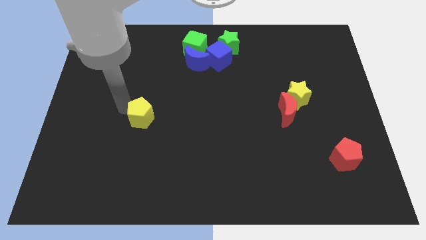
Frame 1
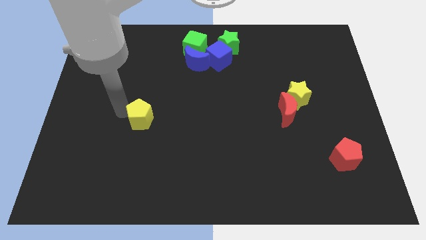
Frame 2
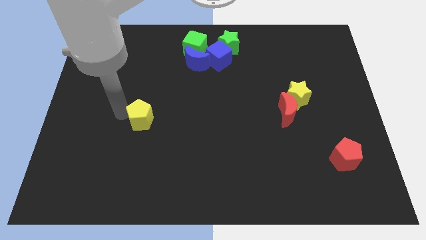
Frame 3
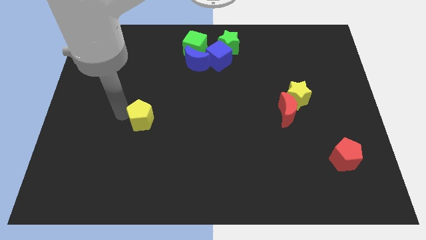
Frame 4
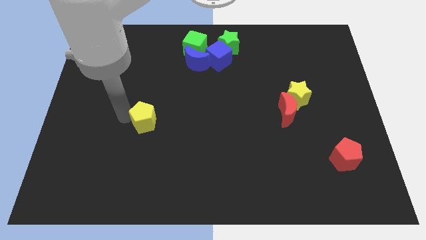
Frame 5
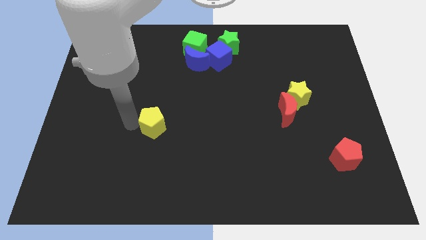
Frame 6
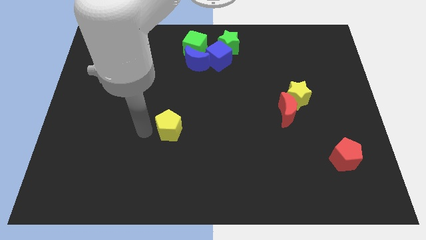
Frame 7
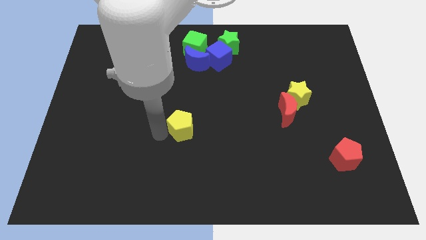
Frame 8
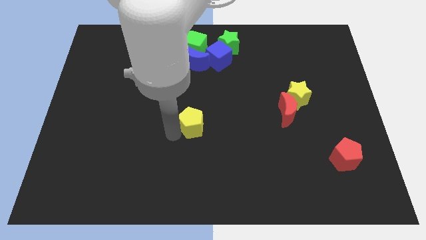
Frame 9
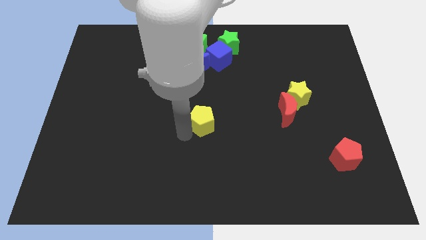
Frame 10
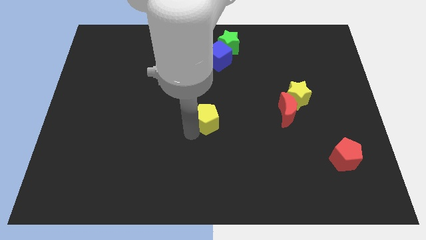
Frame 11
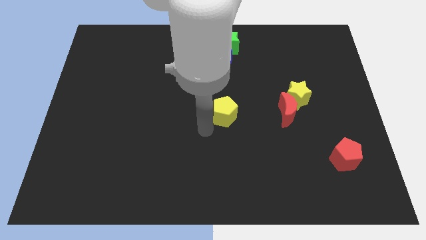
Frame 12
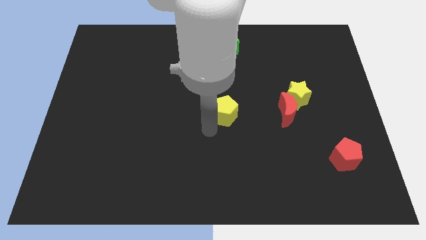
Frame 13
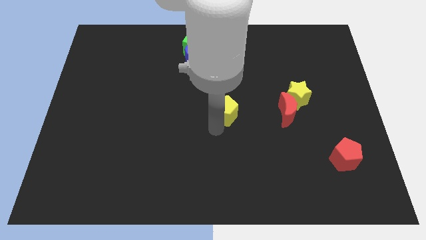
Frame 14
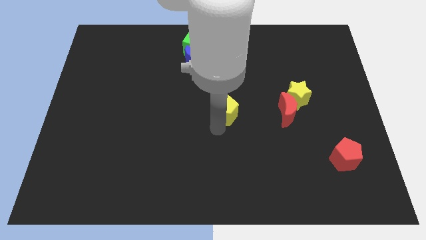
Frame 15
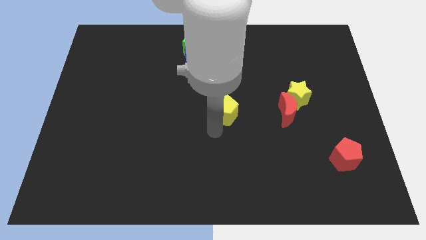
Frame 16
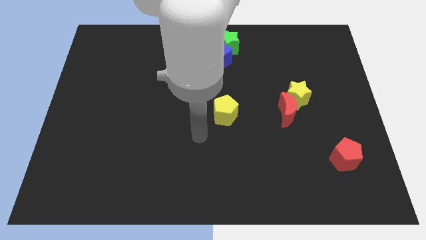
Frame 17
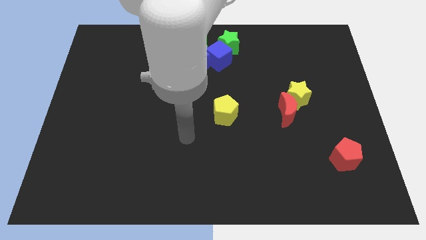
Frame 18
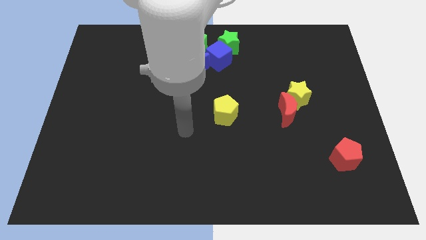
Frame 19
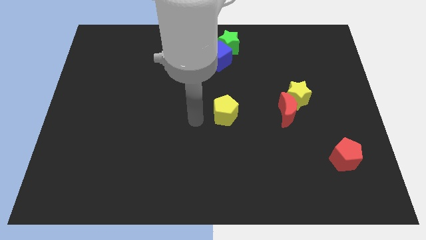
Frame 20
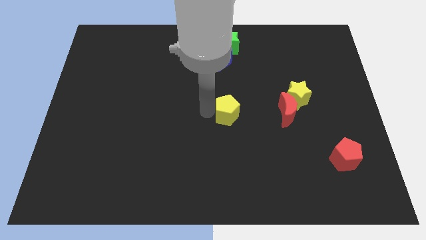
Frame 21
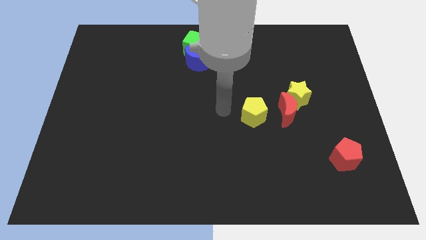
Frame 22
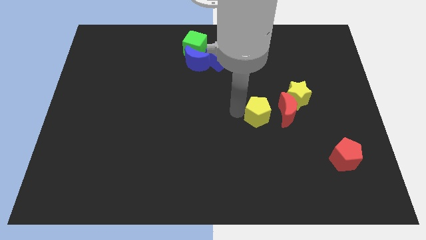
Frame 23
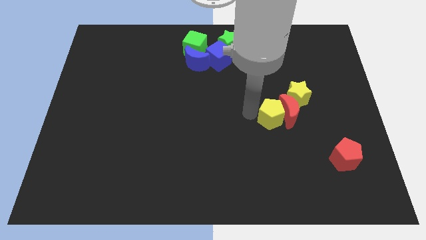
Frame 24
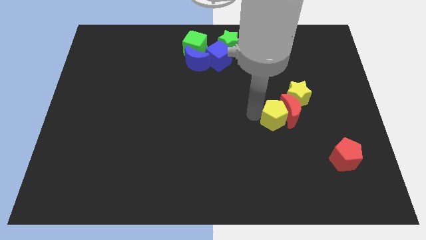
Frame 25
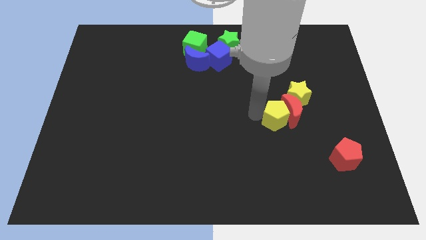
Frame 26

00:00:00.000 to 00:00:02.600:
push the yellow pentagon into the red moon

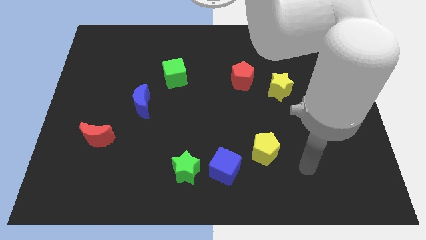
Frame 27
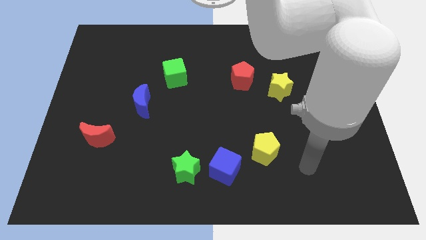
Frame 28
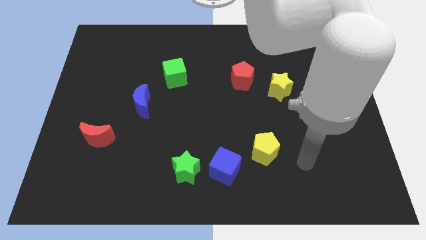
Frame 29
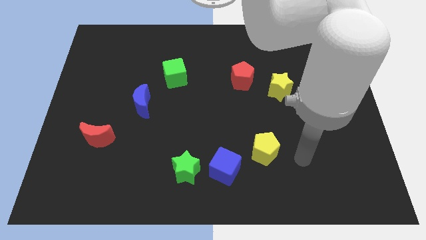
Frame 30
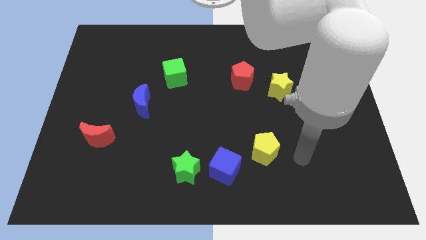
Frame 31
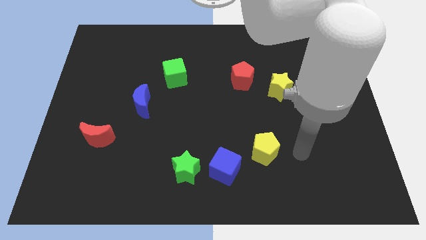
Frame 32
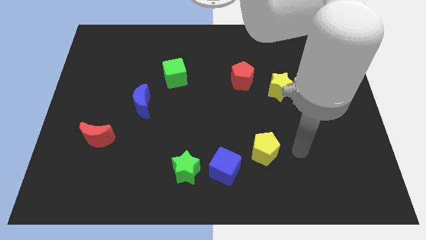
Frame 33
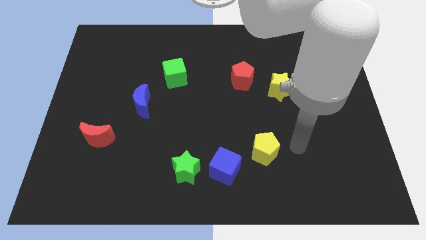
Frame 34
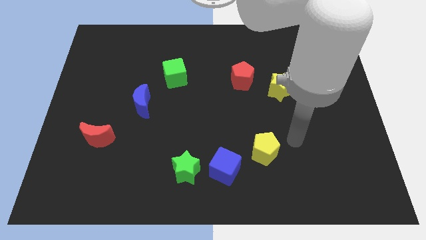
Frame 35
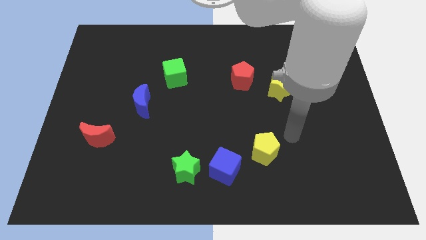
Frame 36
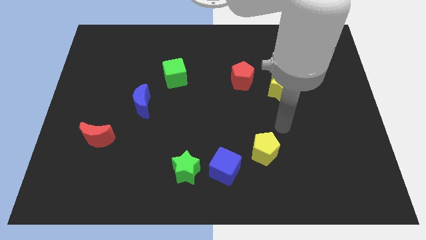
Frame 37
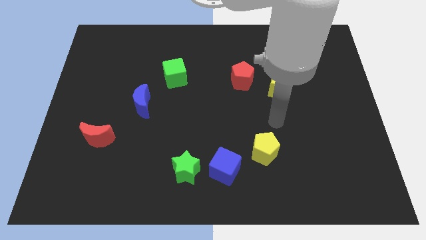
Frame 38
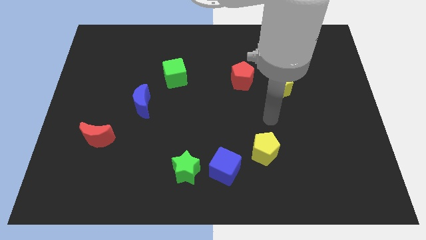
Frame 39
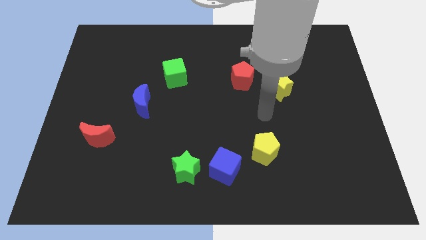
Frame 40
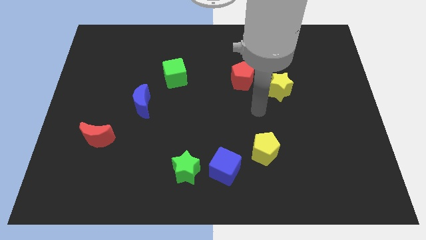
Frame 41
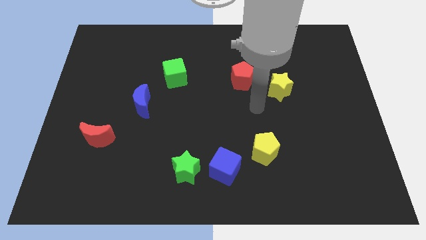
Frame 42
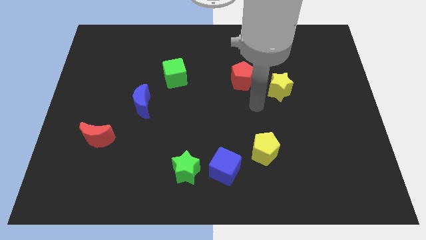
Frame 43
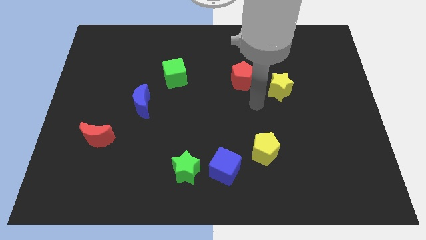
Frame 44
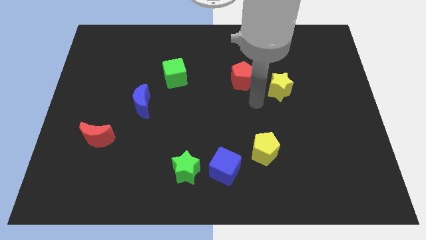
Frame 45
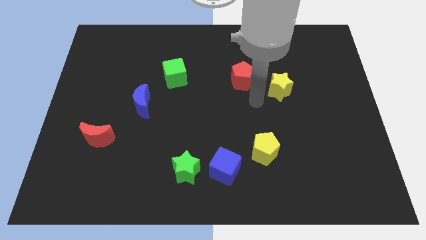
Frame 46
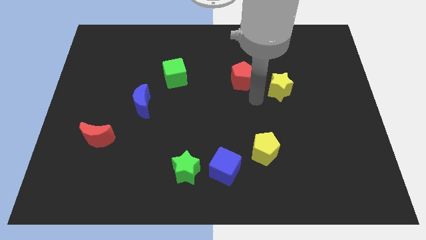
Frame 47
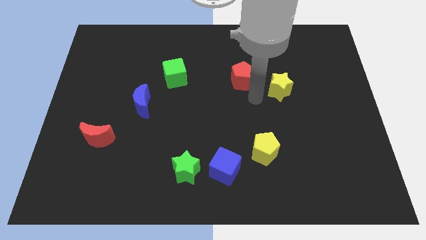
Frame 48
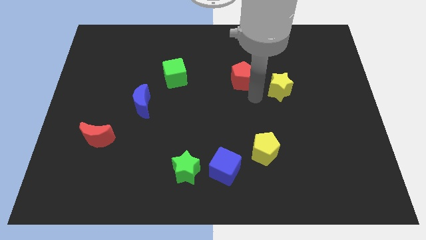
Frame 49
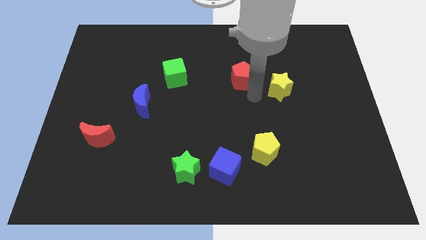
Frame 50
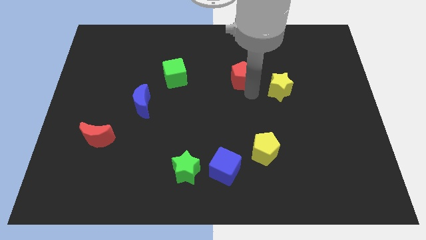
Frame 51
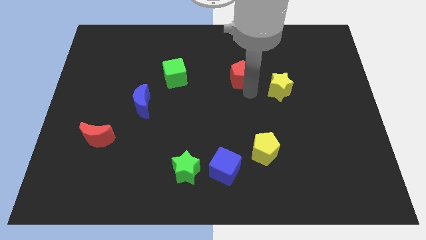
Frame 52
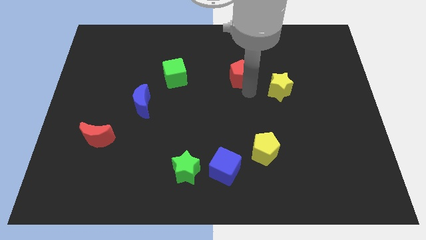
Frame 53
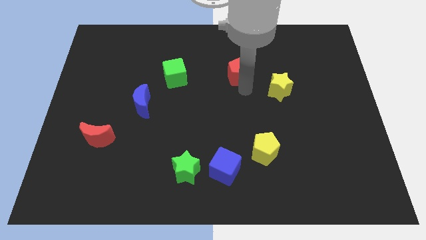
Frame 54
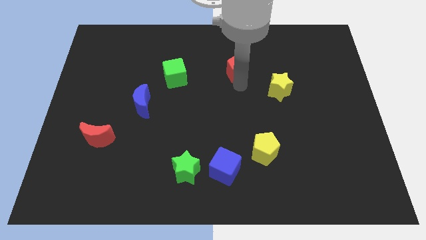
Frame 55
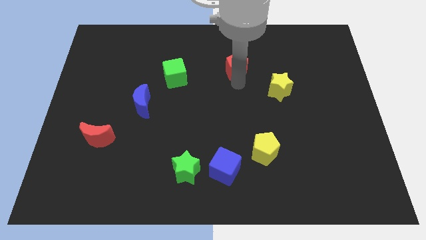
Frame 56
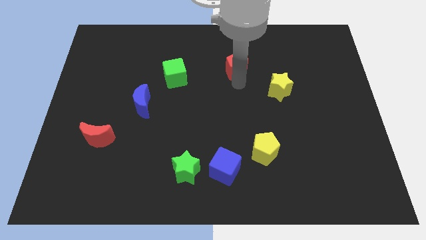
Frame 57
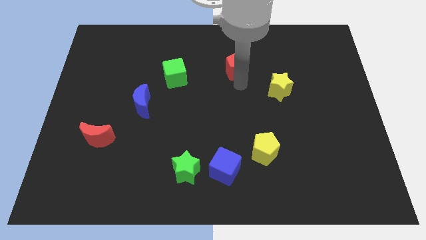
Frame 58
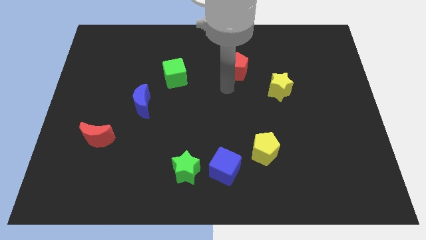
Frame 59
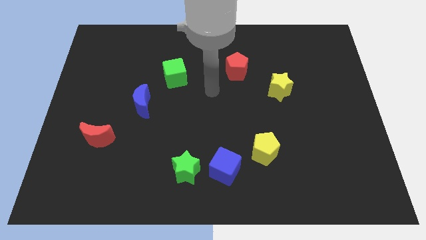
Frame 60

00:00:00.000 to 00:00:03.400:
place red pentagon to the right of the green cube

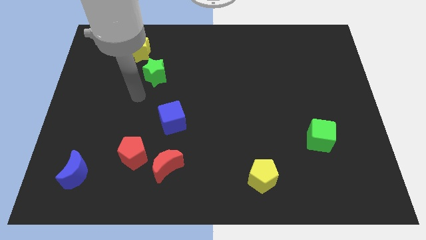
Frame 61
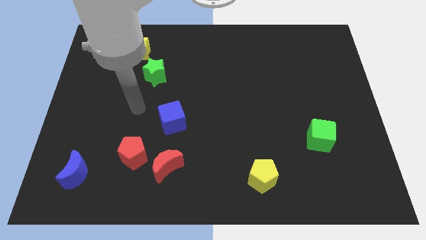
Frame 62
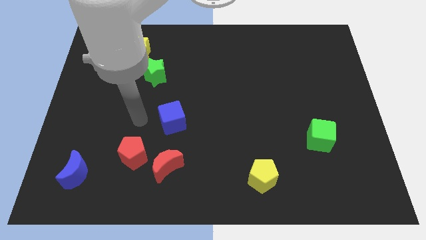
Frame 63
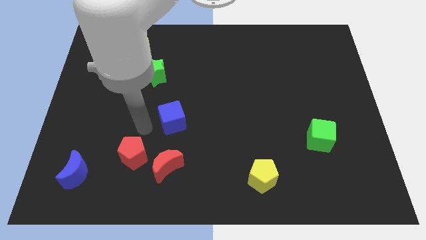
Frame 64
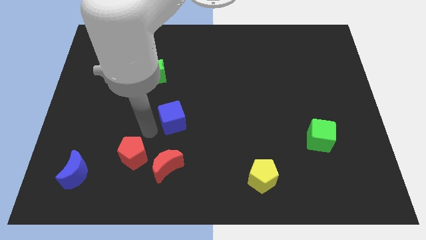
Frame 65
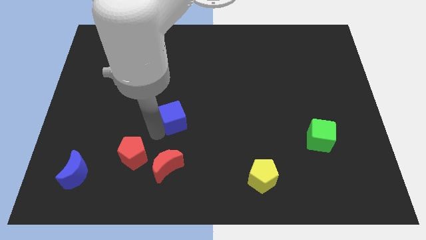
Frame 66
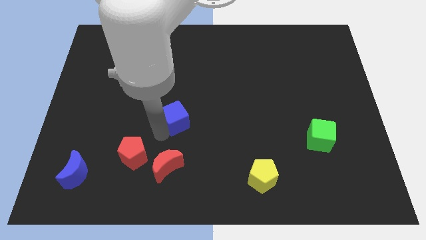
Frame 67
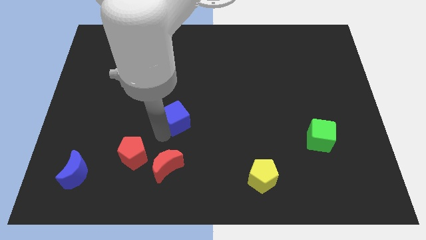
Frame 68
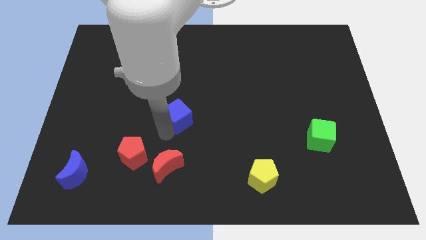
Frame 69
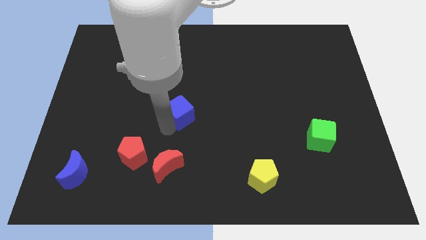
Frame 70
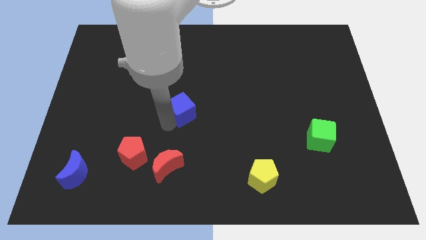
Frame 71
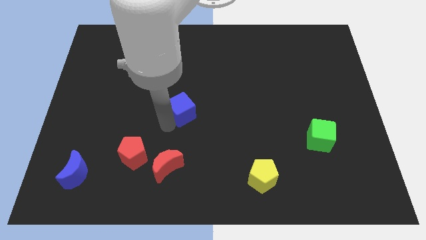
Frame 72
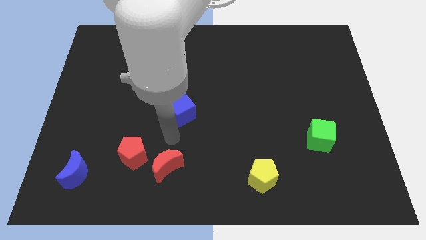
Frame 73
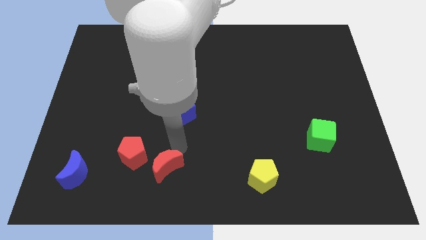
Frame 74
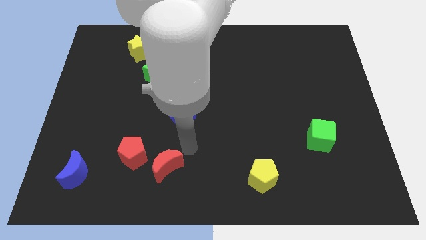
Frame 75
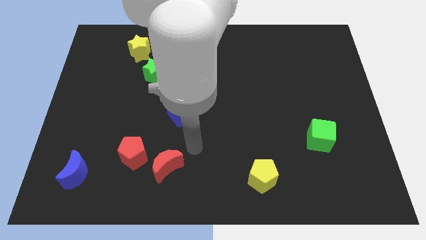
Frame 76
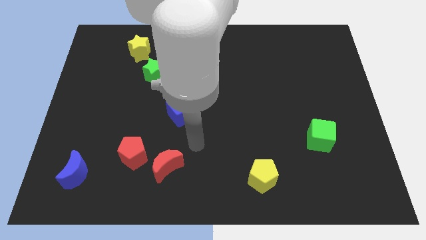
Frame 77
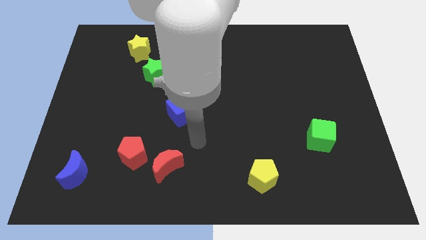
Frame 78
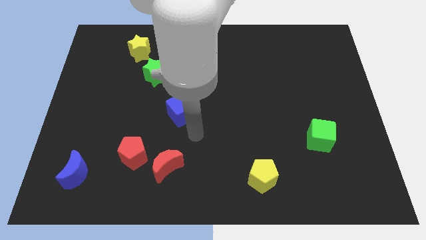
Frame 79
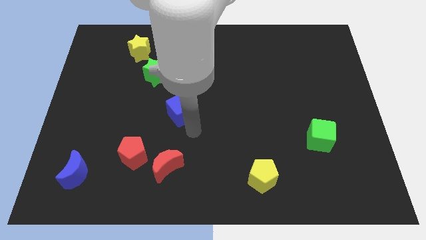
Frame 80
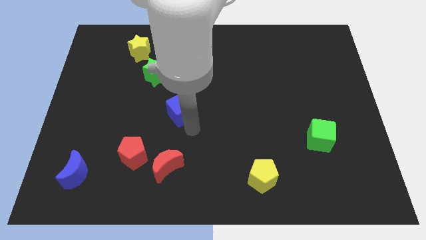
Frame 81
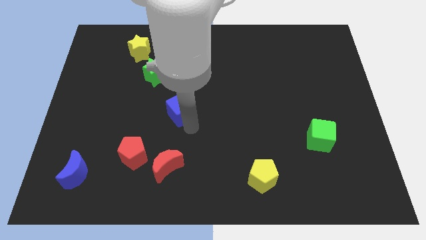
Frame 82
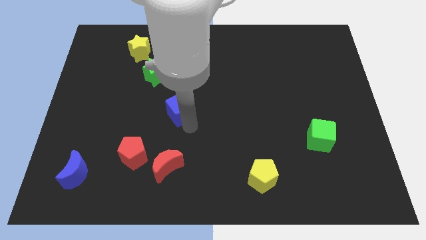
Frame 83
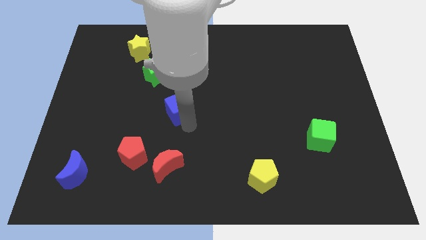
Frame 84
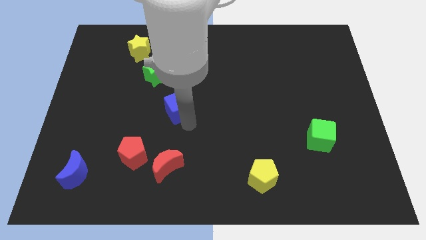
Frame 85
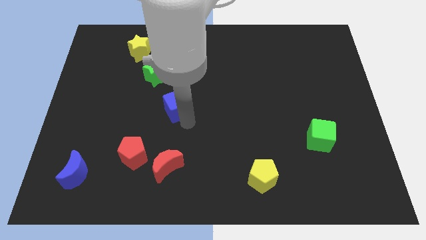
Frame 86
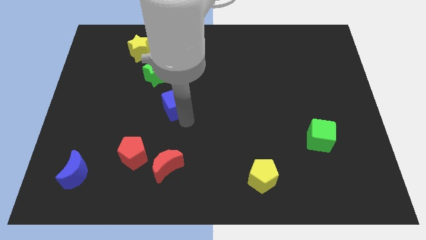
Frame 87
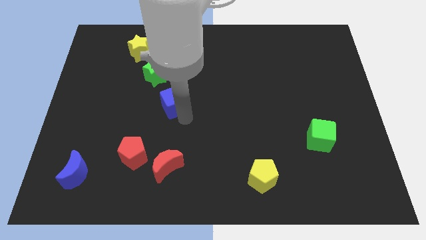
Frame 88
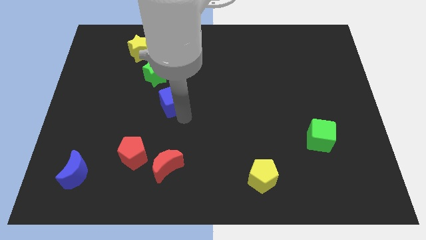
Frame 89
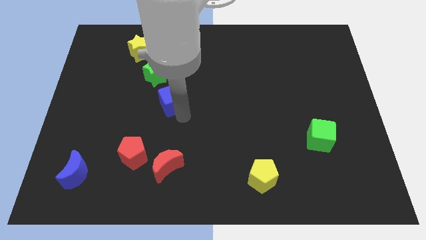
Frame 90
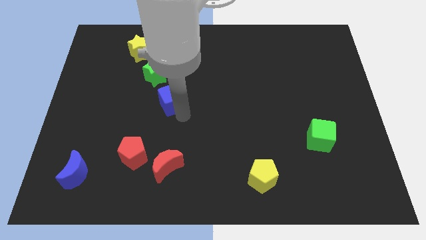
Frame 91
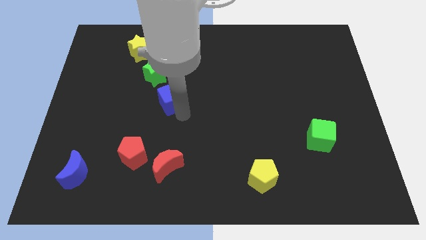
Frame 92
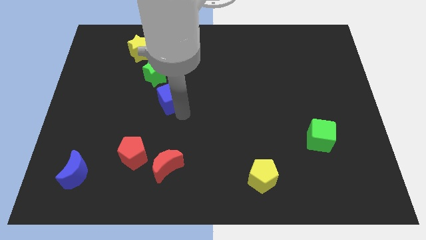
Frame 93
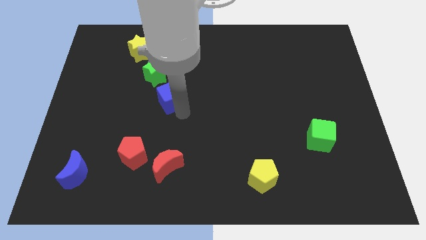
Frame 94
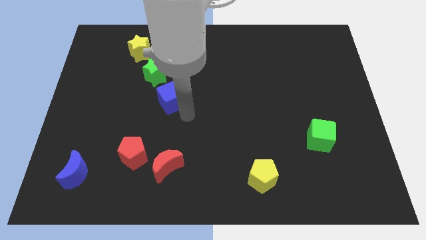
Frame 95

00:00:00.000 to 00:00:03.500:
move the blue cube towards the green star
